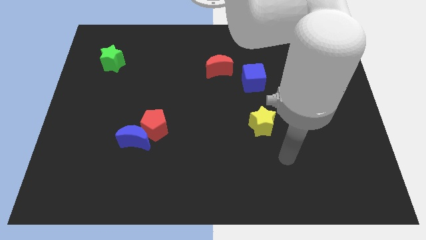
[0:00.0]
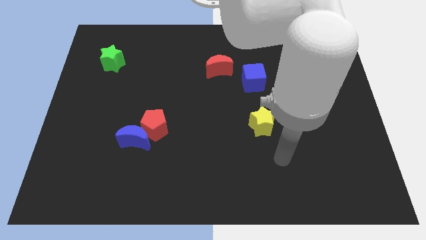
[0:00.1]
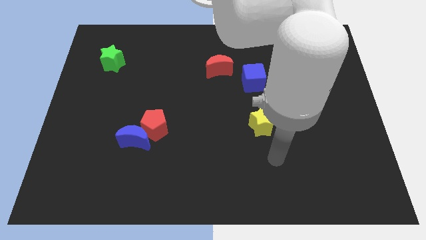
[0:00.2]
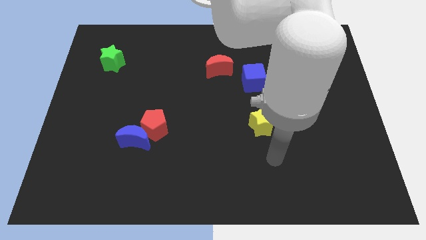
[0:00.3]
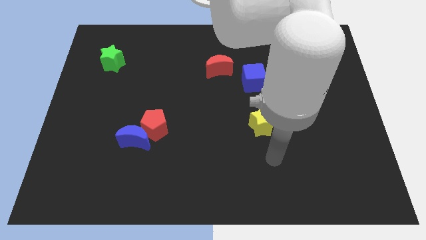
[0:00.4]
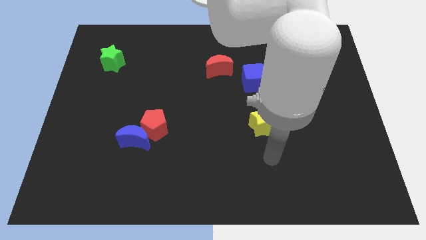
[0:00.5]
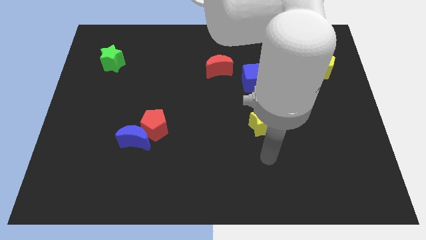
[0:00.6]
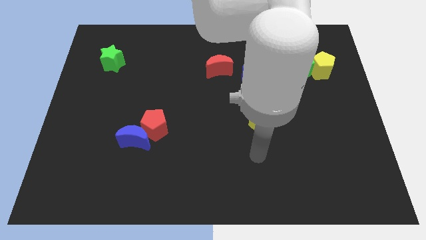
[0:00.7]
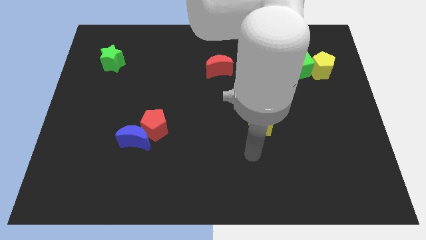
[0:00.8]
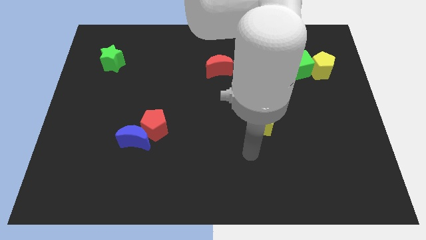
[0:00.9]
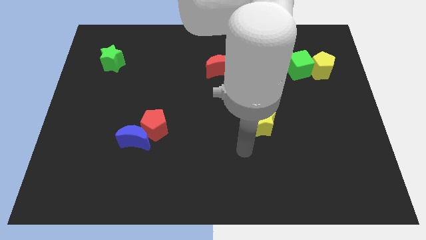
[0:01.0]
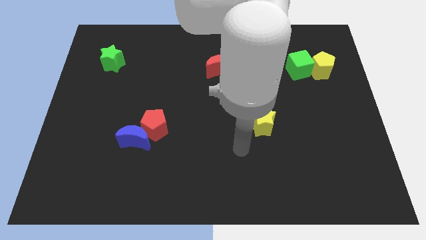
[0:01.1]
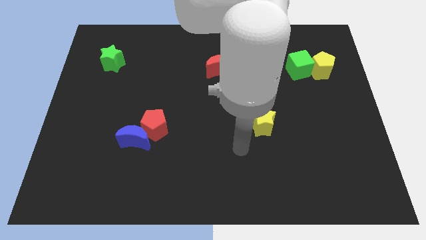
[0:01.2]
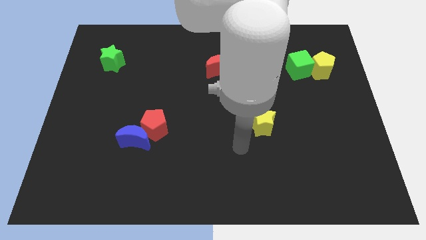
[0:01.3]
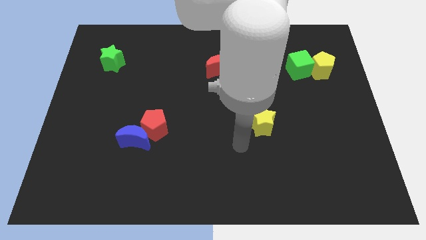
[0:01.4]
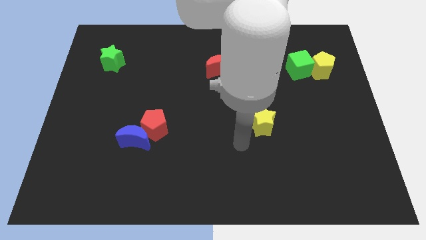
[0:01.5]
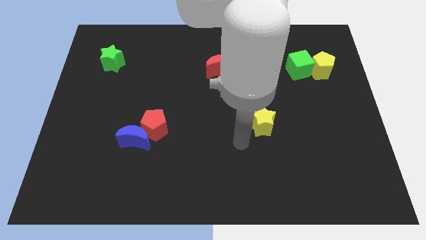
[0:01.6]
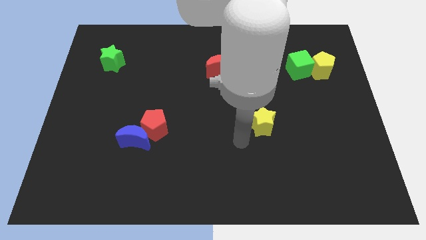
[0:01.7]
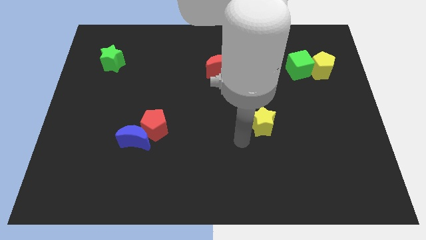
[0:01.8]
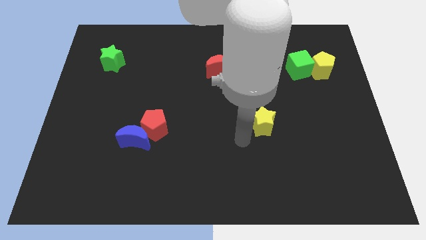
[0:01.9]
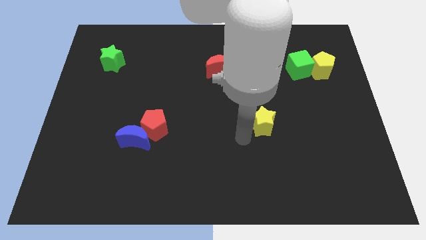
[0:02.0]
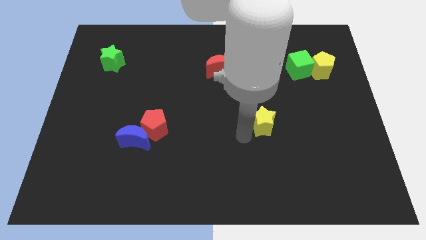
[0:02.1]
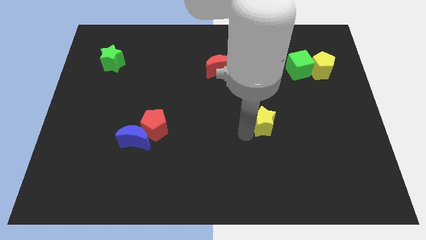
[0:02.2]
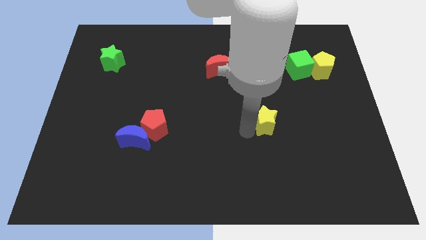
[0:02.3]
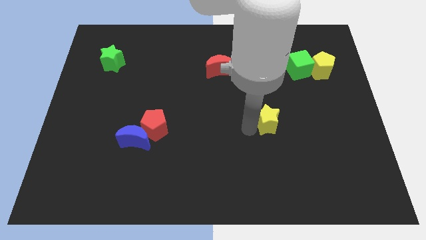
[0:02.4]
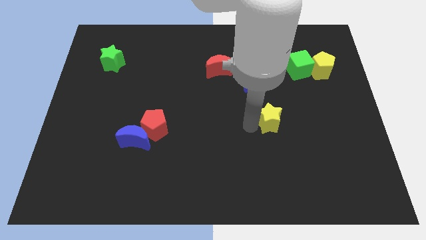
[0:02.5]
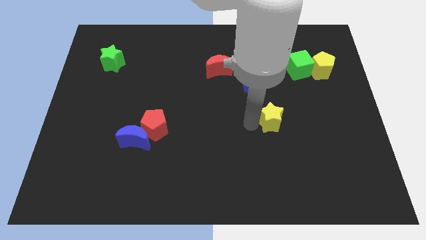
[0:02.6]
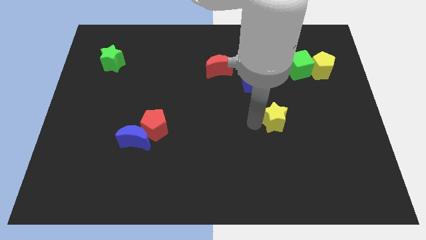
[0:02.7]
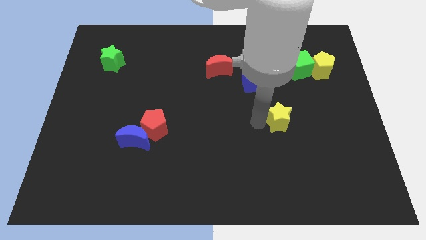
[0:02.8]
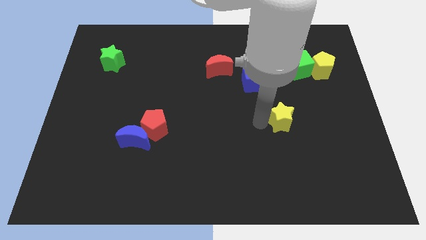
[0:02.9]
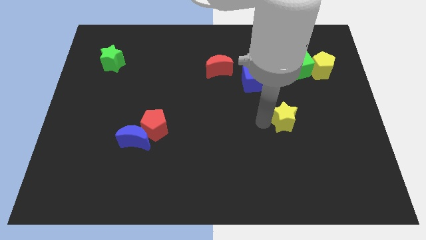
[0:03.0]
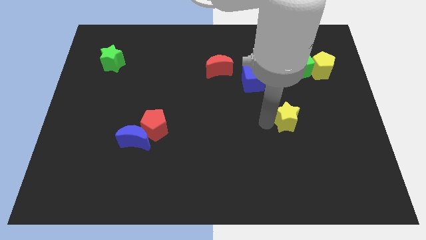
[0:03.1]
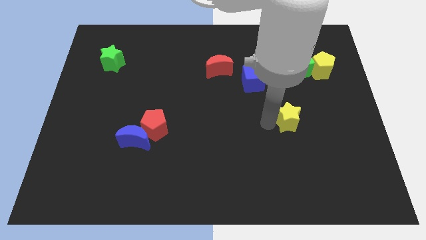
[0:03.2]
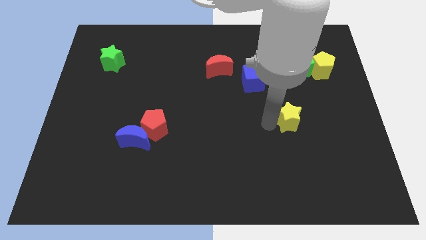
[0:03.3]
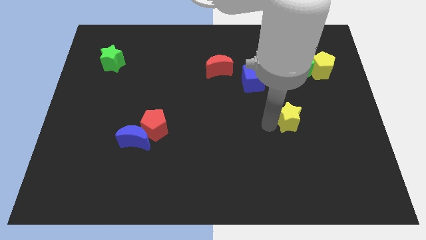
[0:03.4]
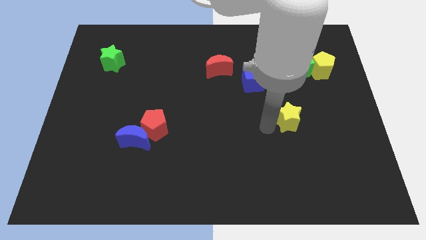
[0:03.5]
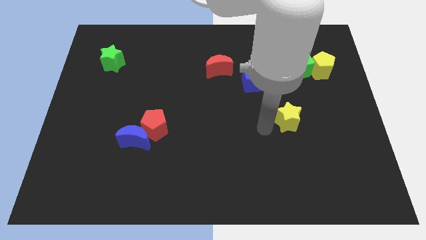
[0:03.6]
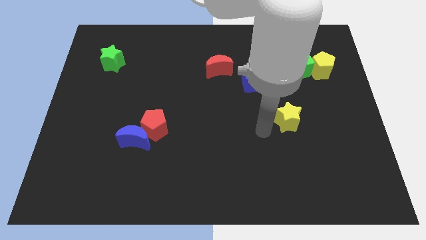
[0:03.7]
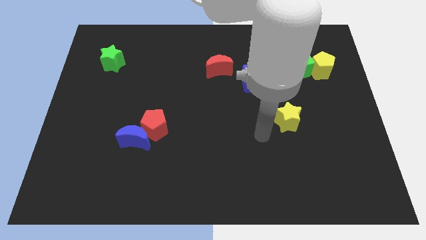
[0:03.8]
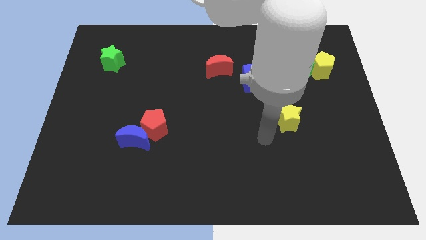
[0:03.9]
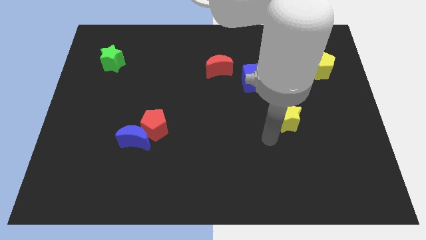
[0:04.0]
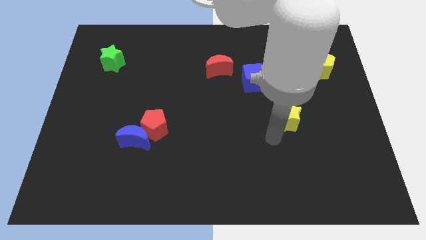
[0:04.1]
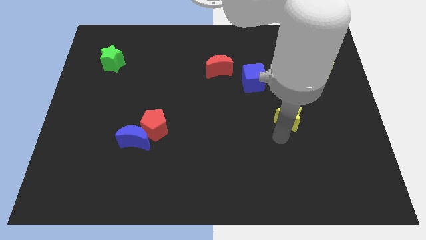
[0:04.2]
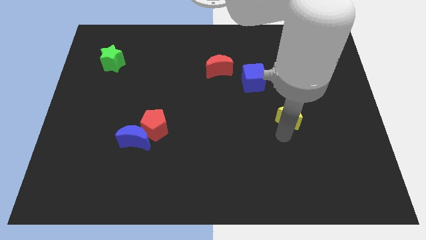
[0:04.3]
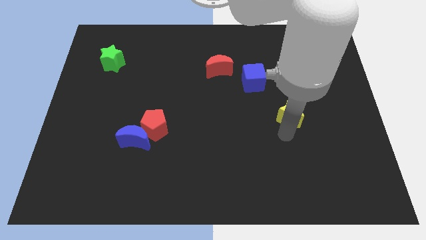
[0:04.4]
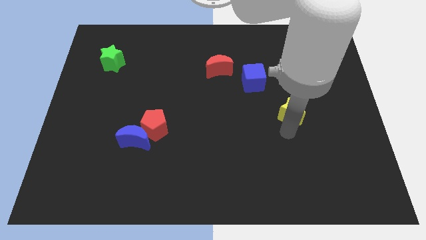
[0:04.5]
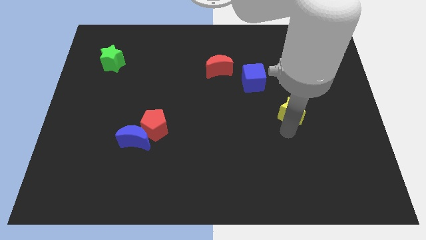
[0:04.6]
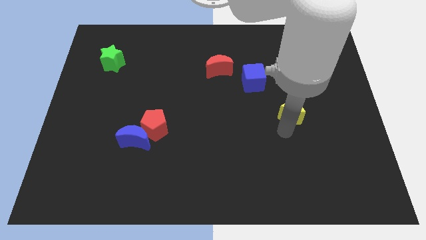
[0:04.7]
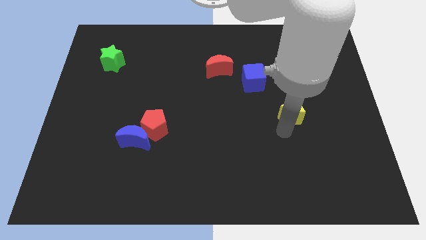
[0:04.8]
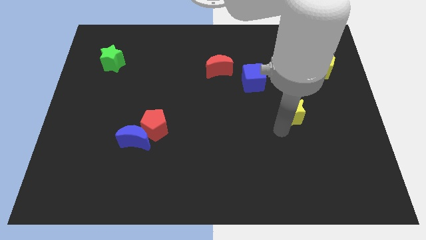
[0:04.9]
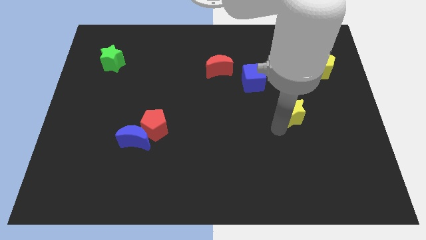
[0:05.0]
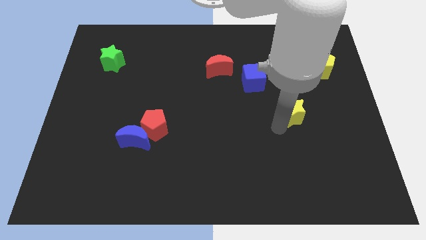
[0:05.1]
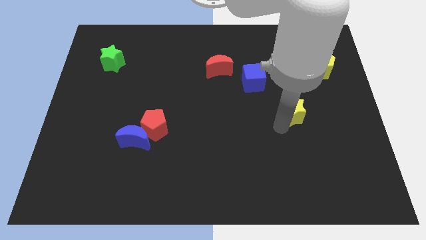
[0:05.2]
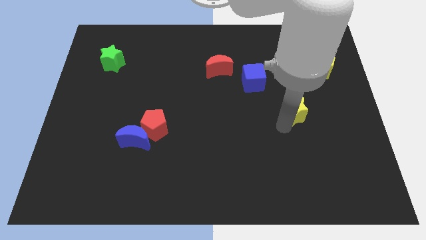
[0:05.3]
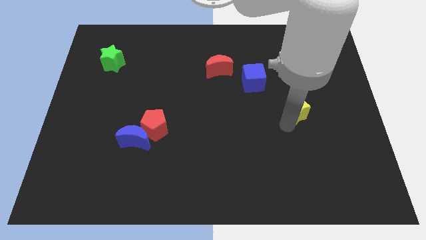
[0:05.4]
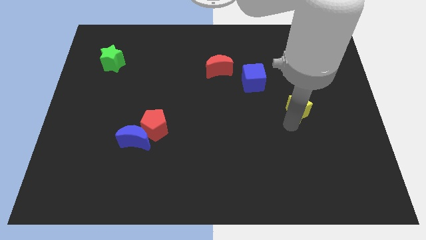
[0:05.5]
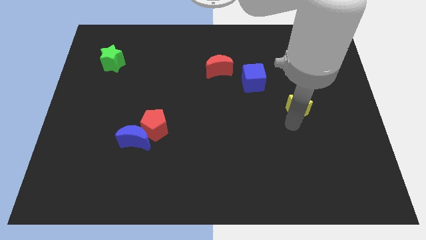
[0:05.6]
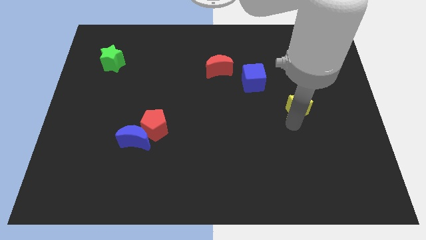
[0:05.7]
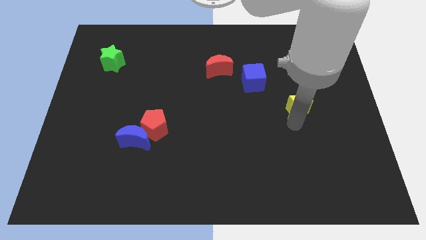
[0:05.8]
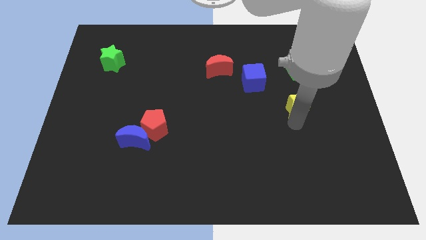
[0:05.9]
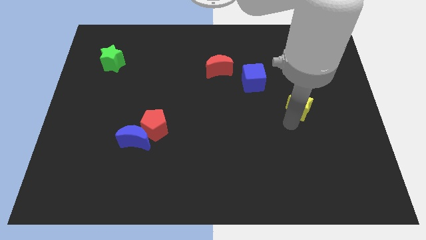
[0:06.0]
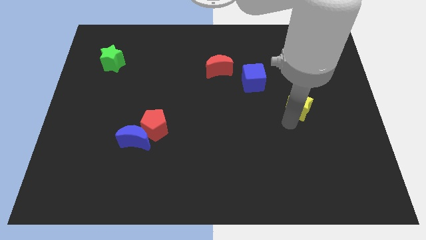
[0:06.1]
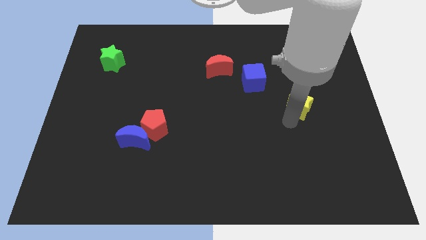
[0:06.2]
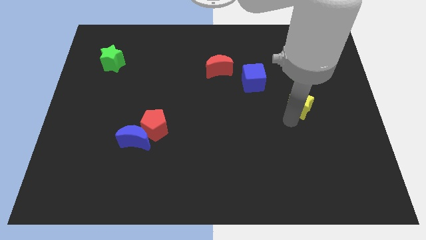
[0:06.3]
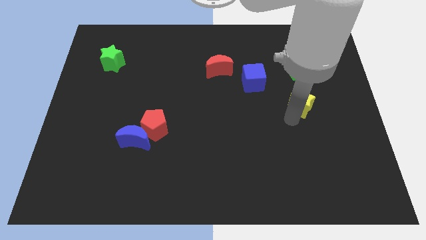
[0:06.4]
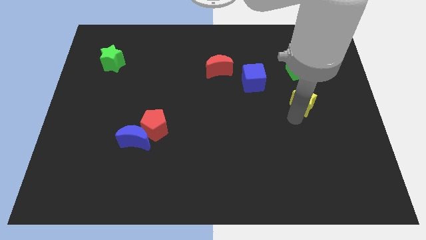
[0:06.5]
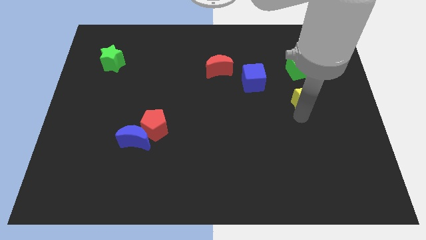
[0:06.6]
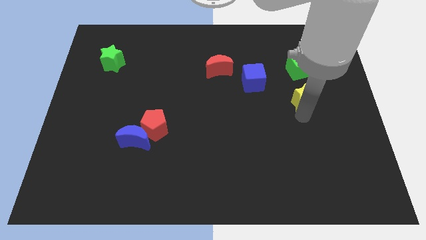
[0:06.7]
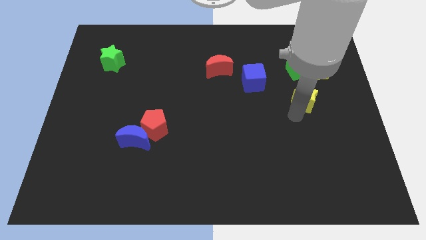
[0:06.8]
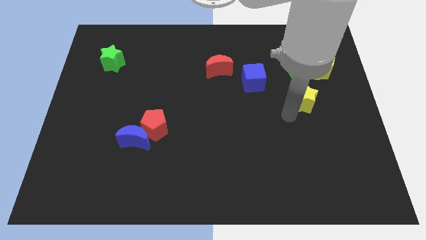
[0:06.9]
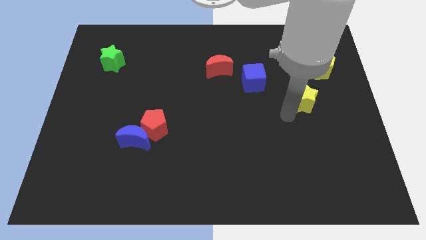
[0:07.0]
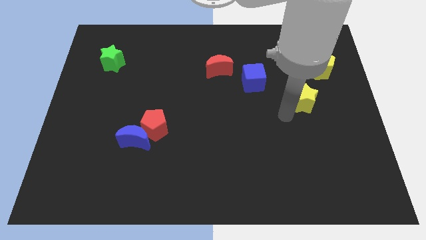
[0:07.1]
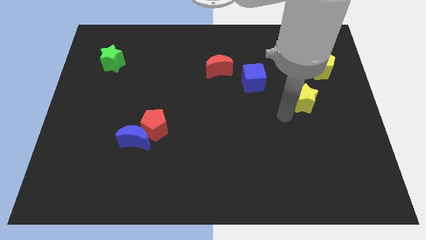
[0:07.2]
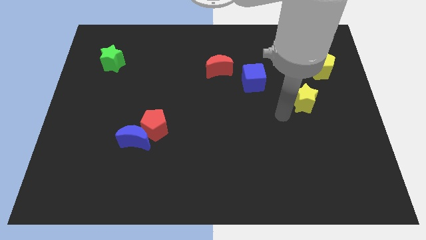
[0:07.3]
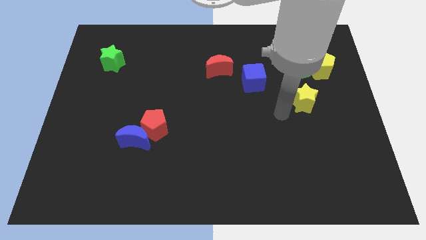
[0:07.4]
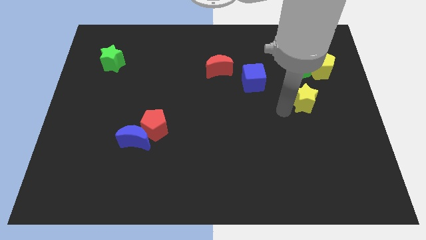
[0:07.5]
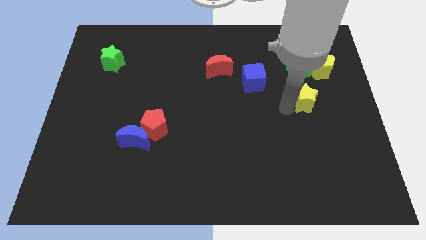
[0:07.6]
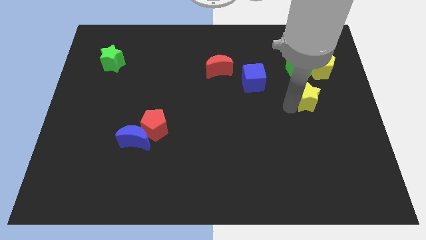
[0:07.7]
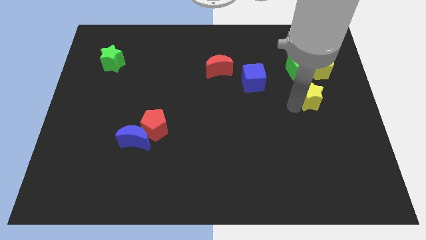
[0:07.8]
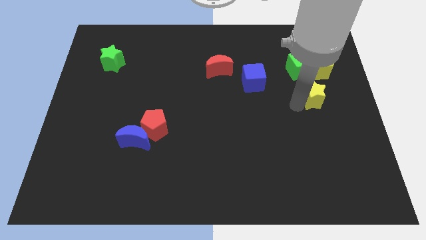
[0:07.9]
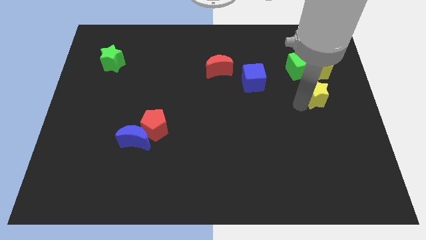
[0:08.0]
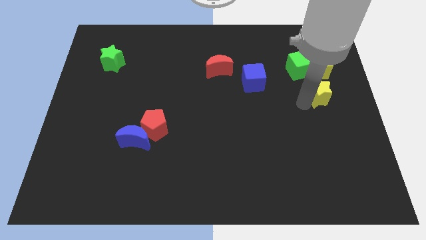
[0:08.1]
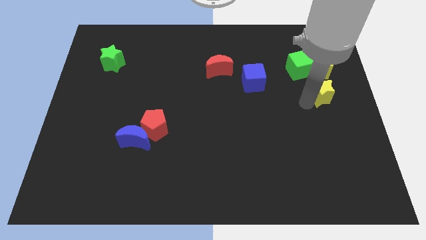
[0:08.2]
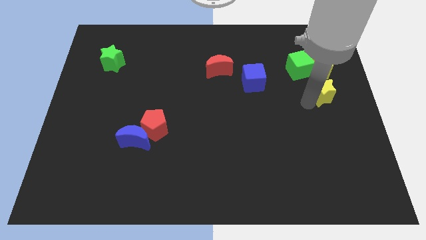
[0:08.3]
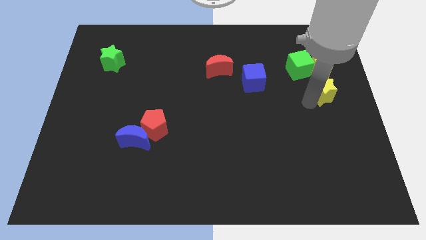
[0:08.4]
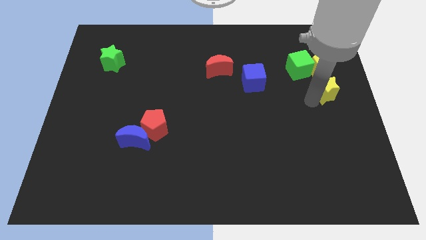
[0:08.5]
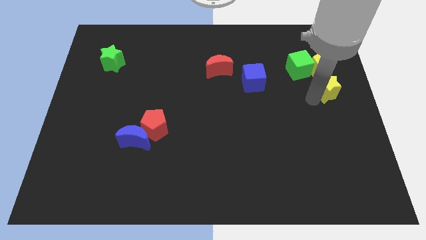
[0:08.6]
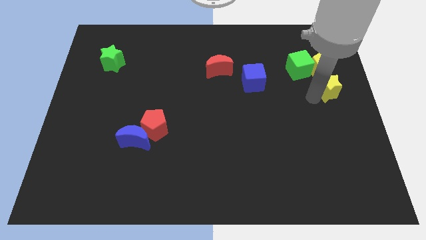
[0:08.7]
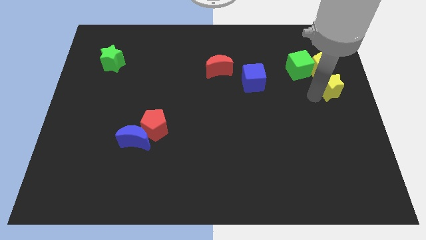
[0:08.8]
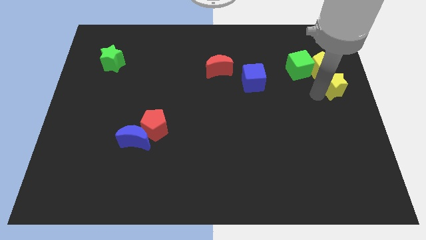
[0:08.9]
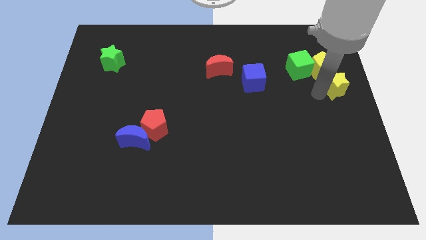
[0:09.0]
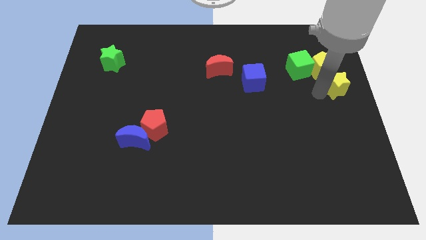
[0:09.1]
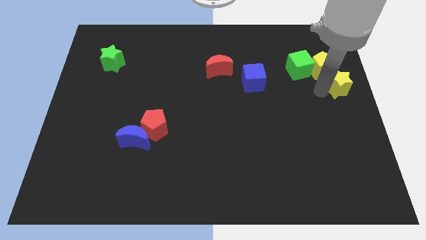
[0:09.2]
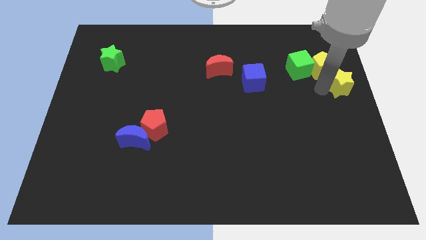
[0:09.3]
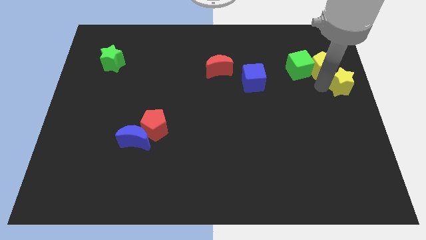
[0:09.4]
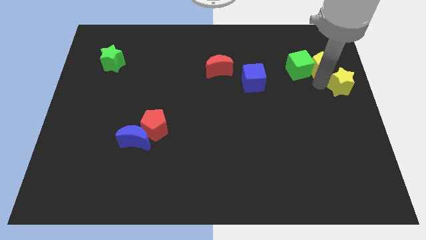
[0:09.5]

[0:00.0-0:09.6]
move yellow star near yellow pentagon
